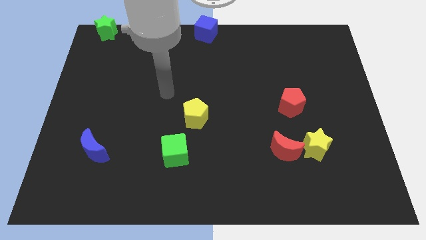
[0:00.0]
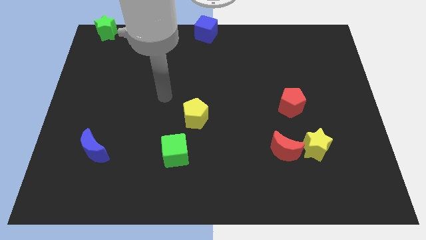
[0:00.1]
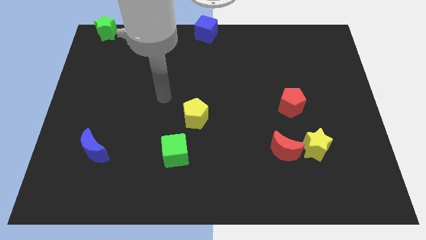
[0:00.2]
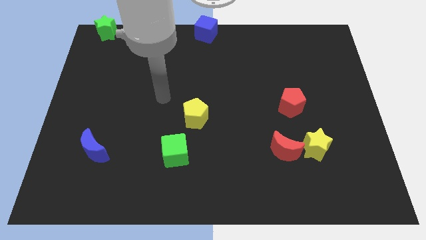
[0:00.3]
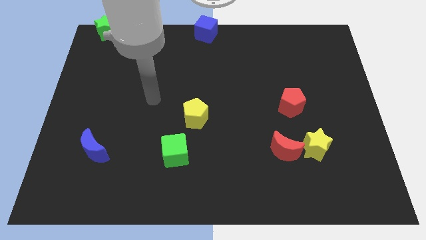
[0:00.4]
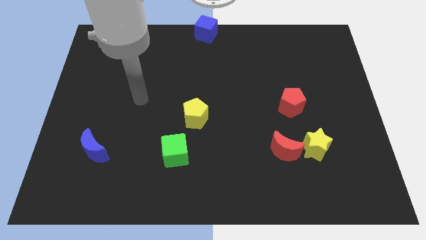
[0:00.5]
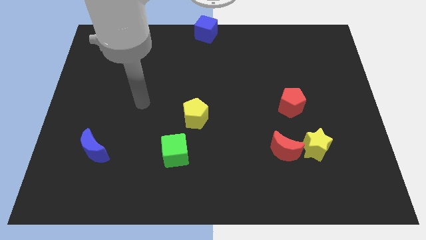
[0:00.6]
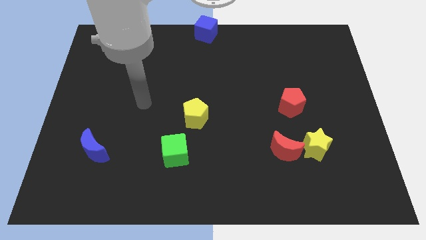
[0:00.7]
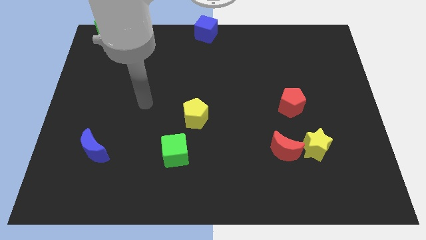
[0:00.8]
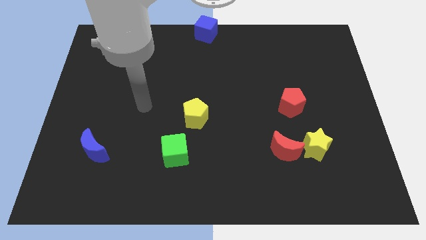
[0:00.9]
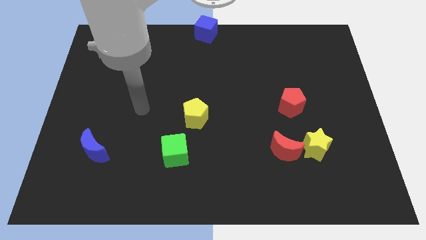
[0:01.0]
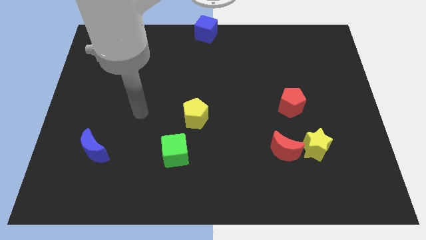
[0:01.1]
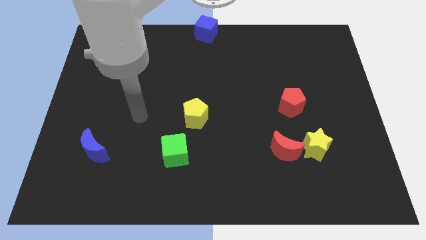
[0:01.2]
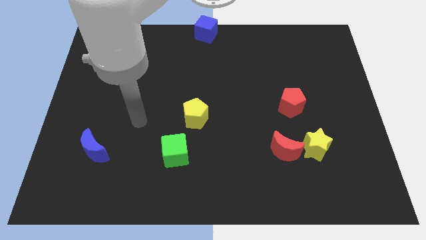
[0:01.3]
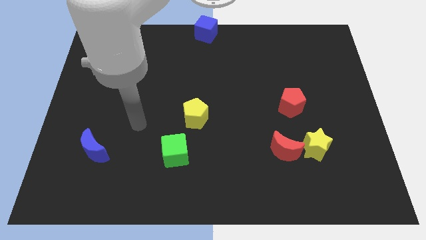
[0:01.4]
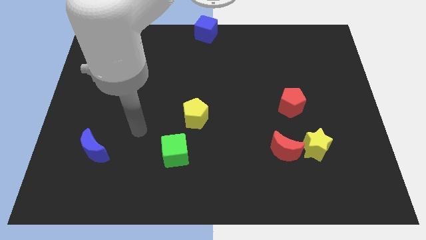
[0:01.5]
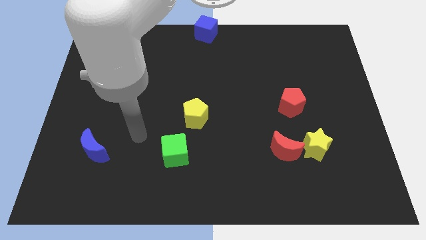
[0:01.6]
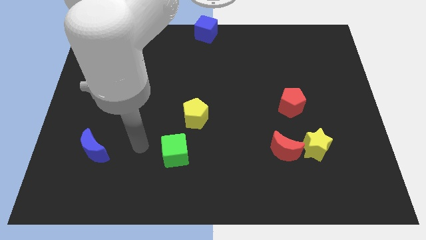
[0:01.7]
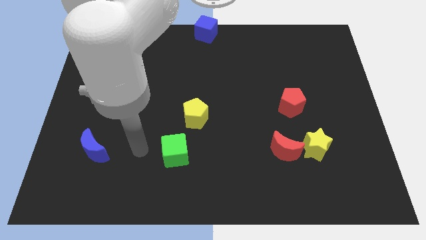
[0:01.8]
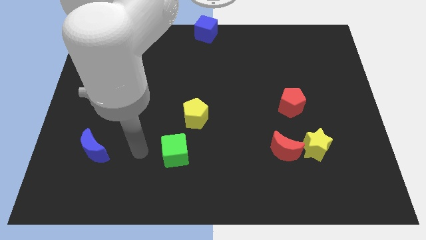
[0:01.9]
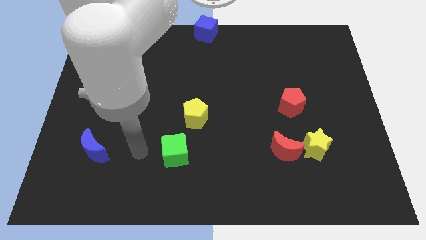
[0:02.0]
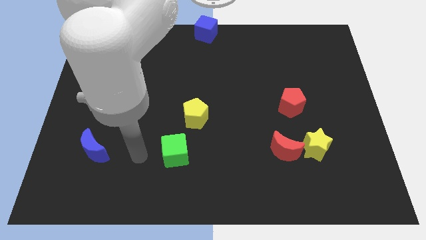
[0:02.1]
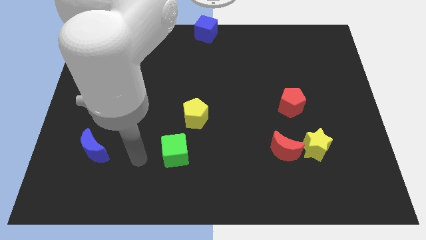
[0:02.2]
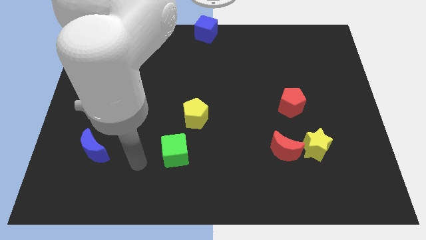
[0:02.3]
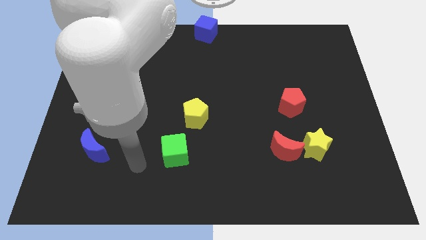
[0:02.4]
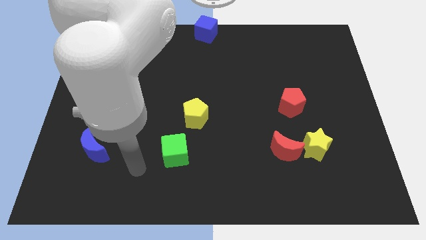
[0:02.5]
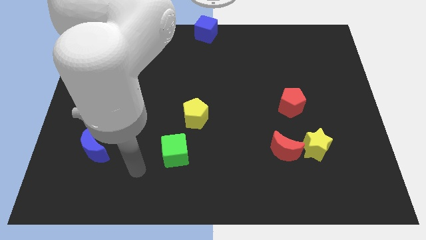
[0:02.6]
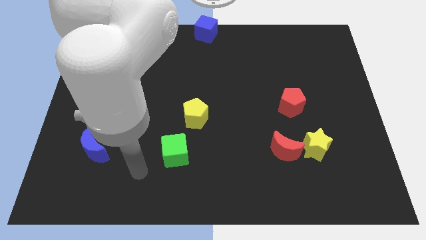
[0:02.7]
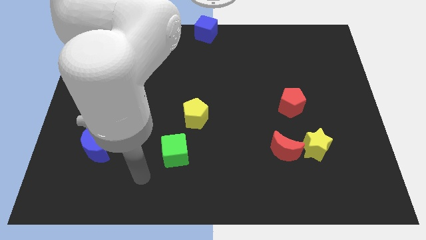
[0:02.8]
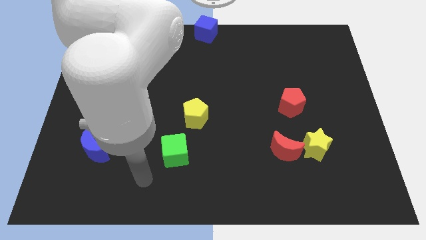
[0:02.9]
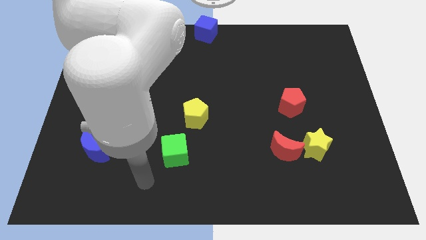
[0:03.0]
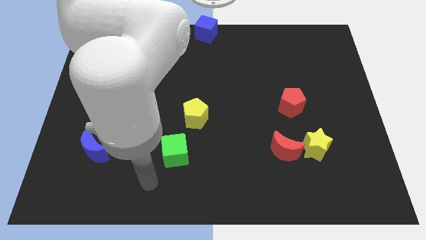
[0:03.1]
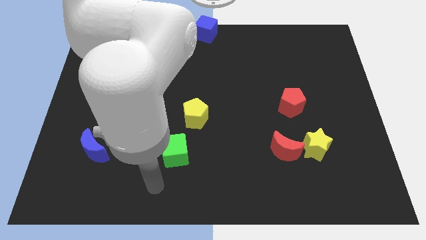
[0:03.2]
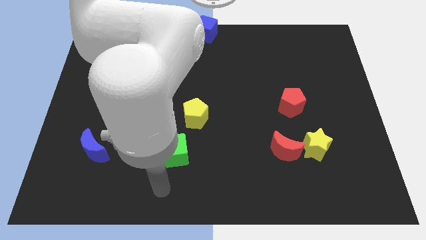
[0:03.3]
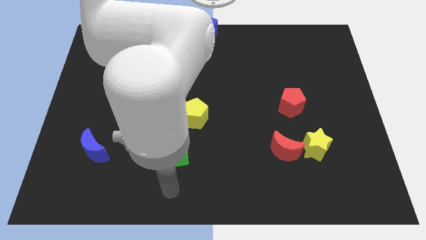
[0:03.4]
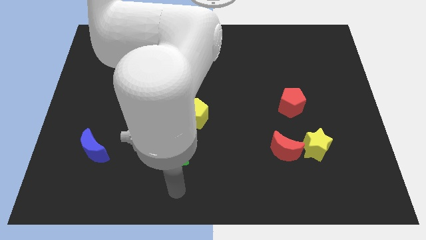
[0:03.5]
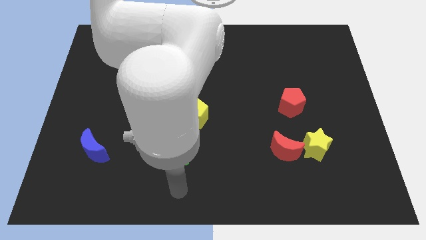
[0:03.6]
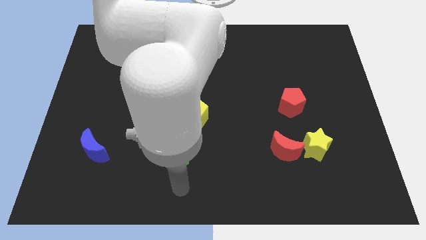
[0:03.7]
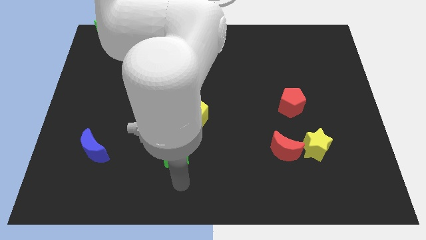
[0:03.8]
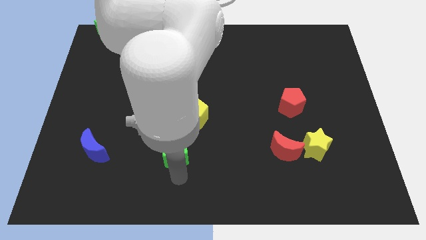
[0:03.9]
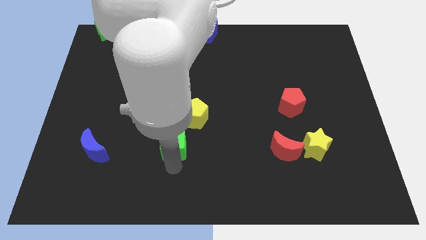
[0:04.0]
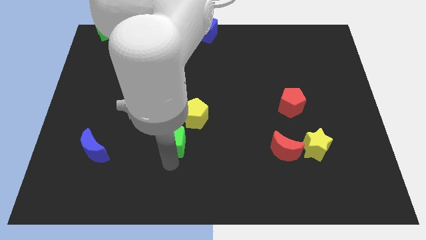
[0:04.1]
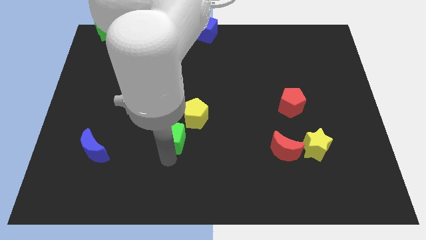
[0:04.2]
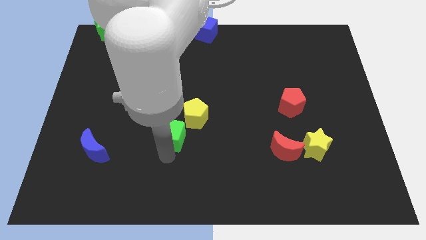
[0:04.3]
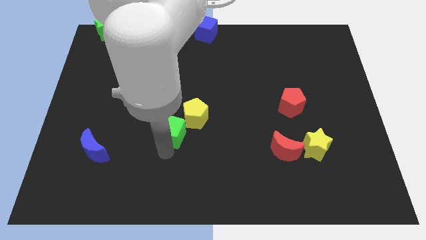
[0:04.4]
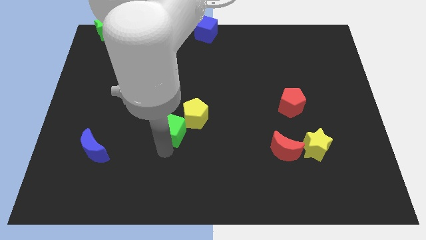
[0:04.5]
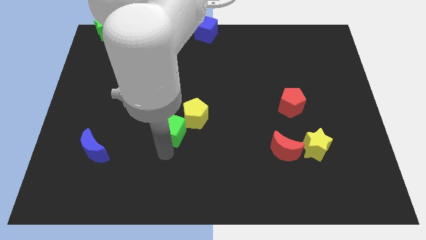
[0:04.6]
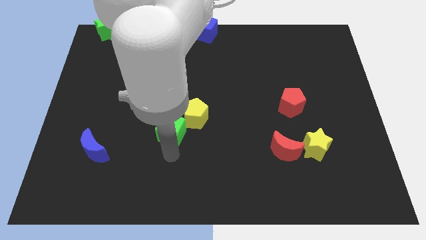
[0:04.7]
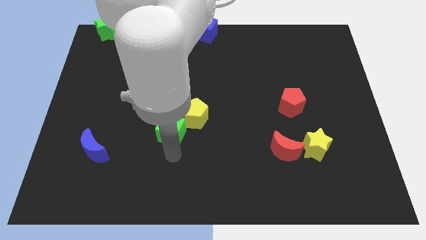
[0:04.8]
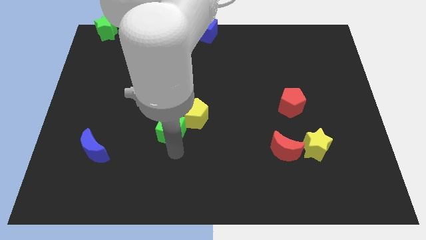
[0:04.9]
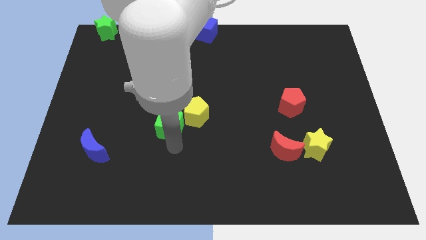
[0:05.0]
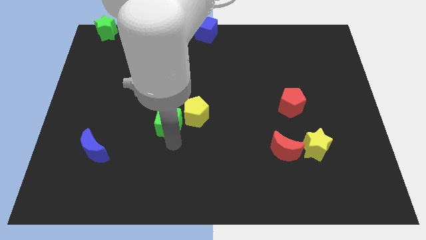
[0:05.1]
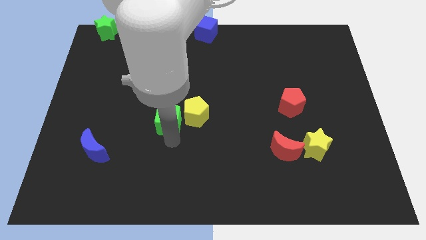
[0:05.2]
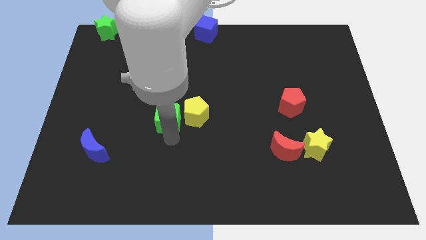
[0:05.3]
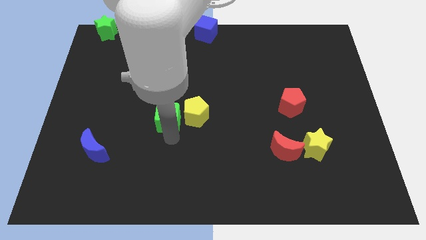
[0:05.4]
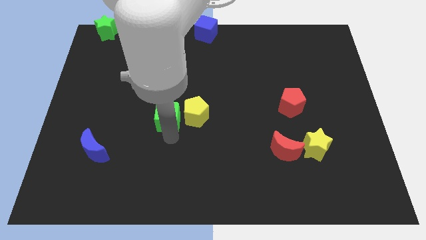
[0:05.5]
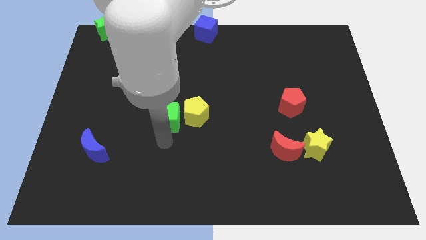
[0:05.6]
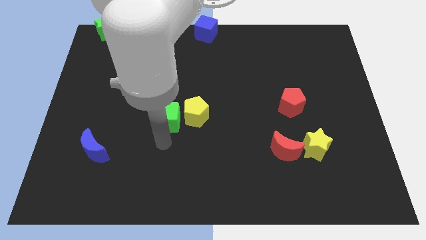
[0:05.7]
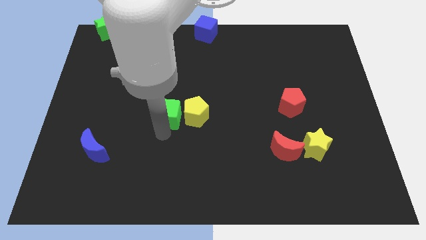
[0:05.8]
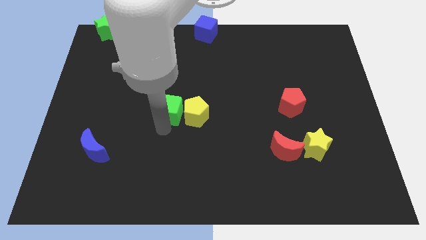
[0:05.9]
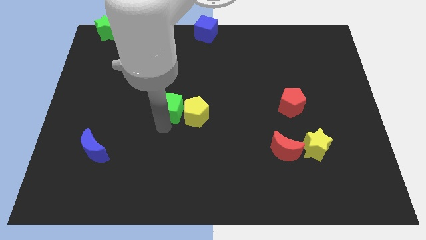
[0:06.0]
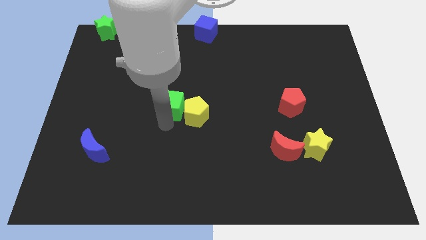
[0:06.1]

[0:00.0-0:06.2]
place the green cube to the left of the yellow pentagon

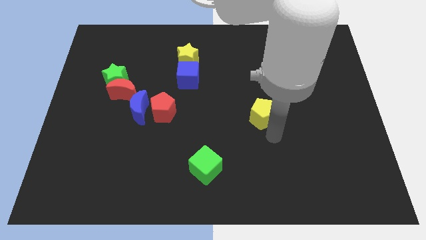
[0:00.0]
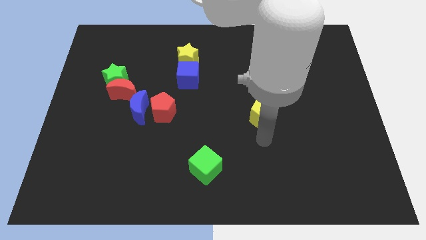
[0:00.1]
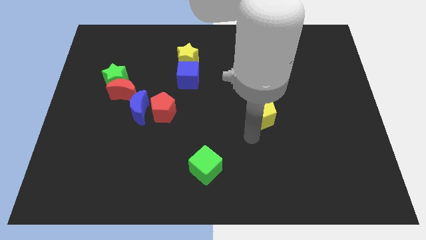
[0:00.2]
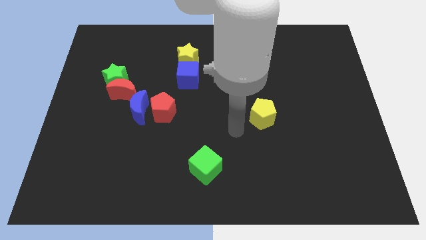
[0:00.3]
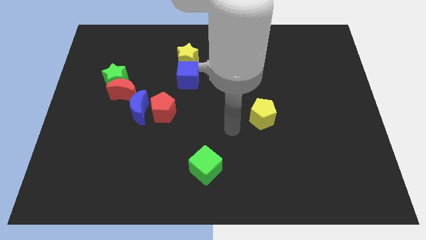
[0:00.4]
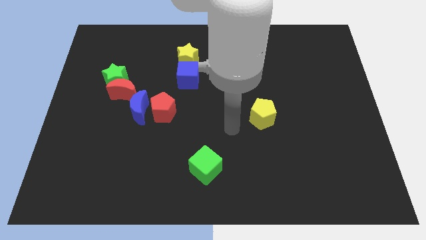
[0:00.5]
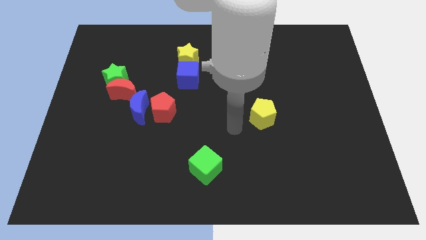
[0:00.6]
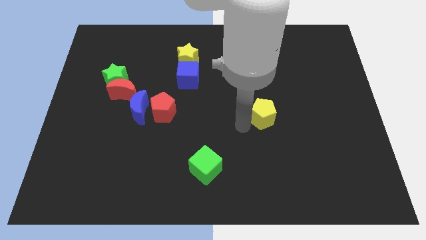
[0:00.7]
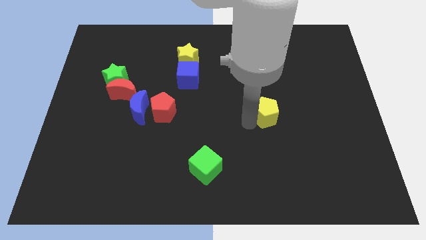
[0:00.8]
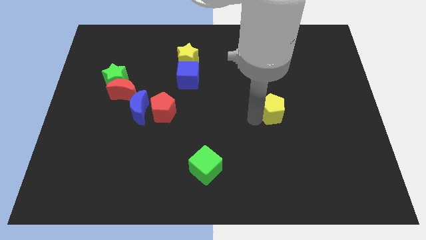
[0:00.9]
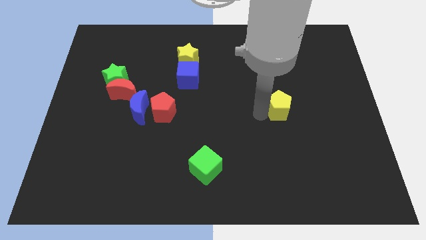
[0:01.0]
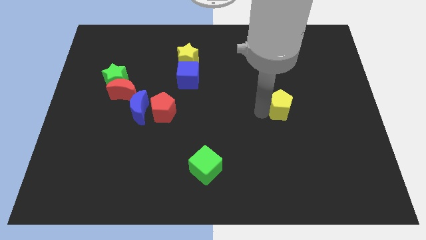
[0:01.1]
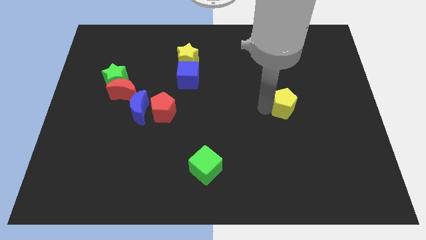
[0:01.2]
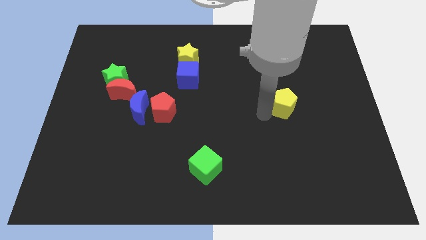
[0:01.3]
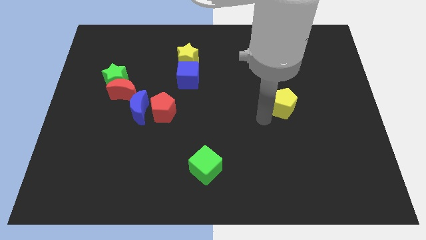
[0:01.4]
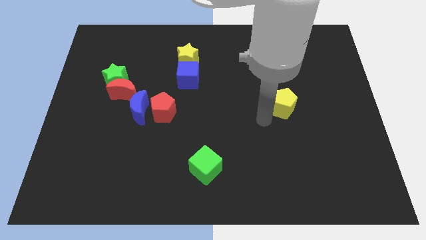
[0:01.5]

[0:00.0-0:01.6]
push the yellow pentagon slightly towards the right

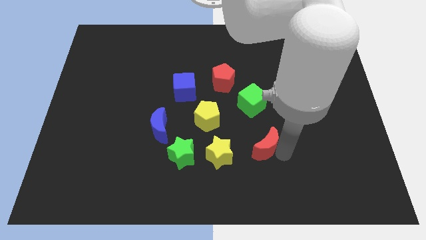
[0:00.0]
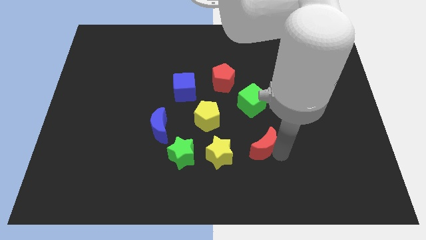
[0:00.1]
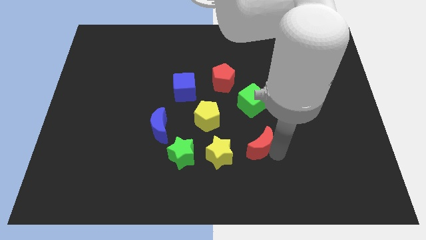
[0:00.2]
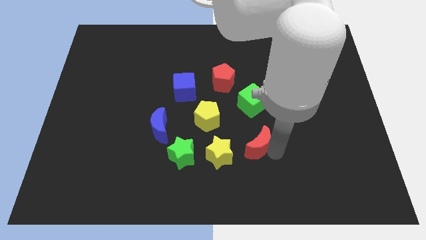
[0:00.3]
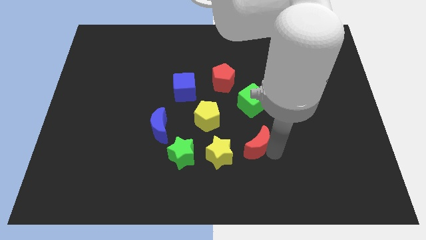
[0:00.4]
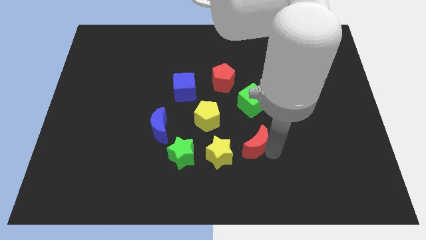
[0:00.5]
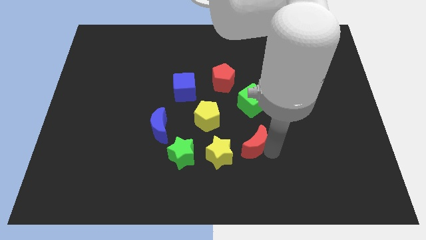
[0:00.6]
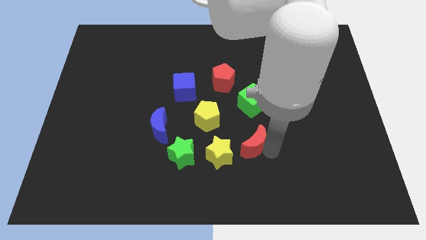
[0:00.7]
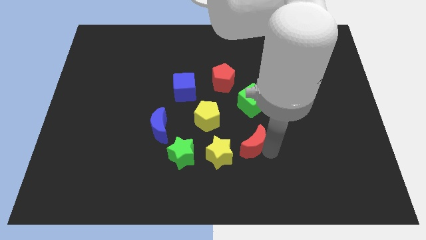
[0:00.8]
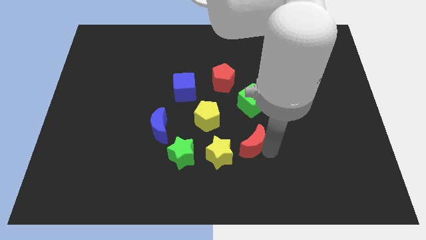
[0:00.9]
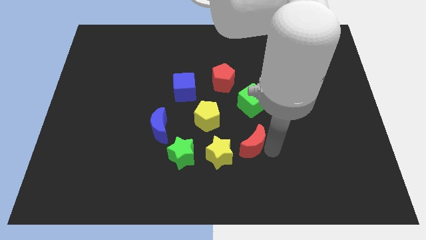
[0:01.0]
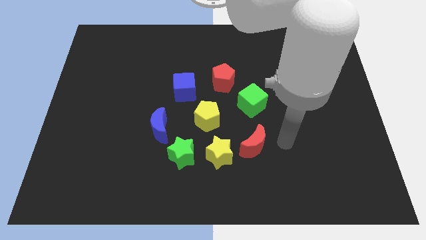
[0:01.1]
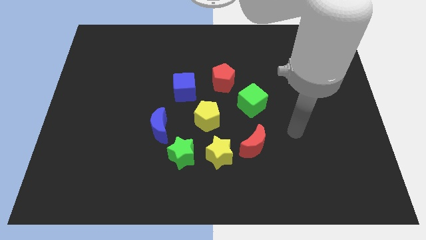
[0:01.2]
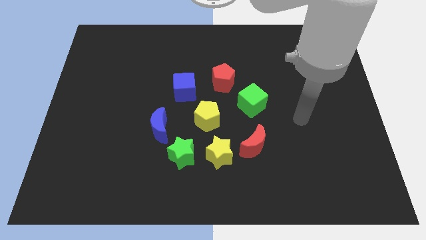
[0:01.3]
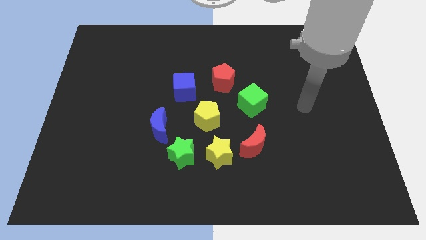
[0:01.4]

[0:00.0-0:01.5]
move slightly the red crescent towards the yellow star
